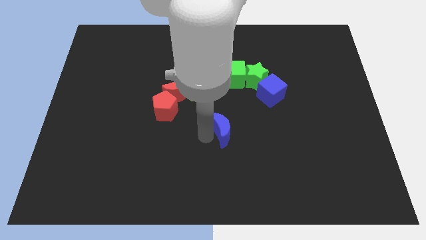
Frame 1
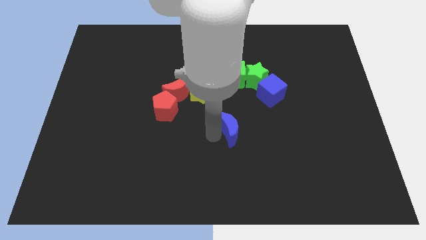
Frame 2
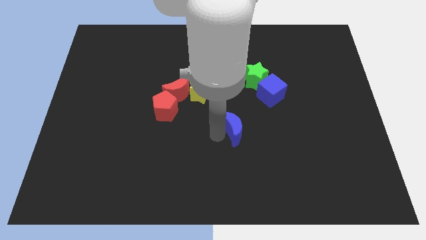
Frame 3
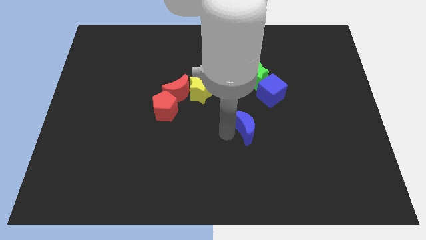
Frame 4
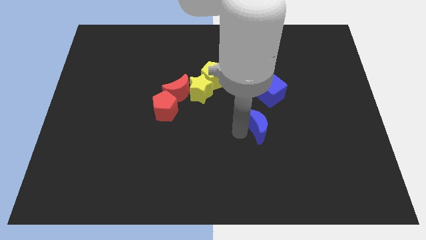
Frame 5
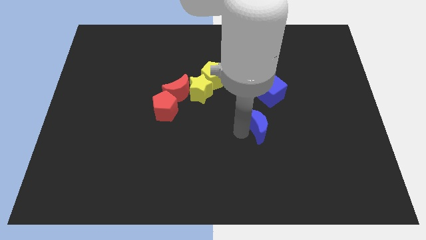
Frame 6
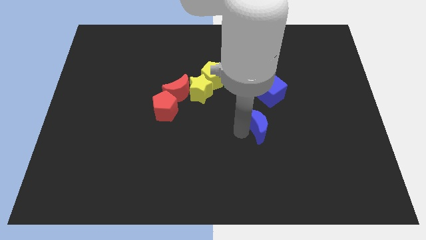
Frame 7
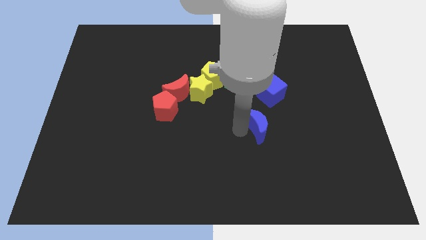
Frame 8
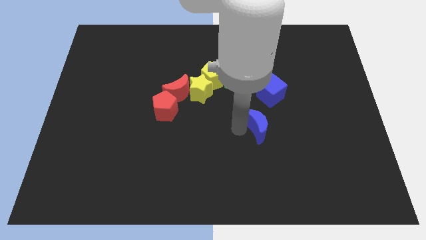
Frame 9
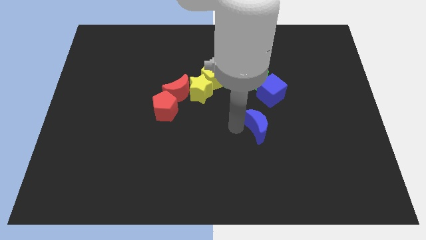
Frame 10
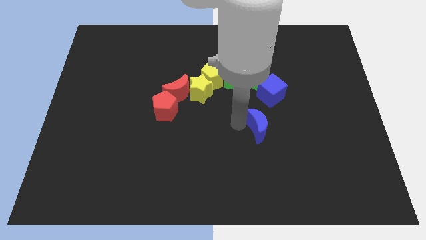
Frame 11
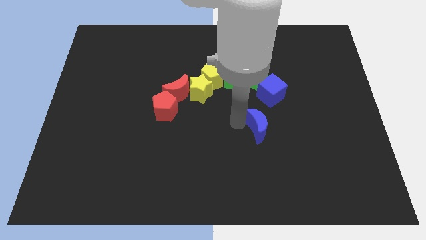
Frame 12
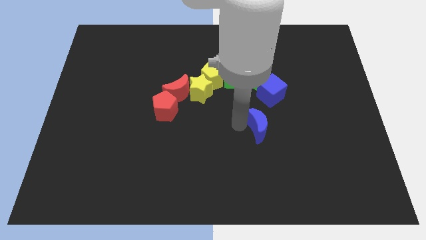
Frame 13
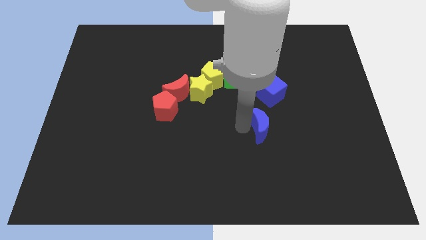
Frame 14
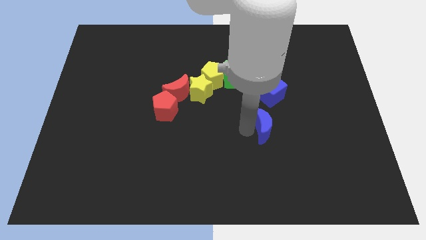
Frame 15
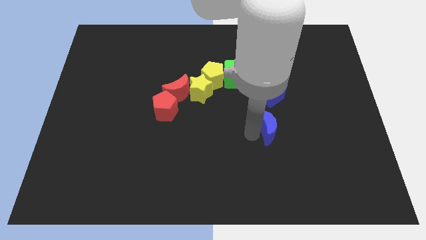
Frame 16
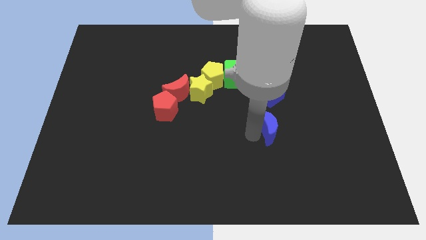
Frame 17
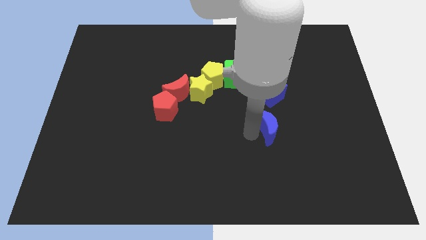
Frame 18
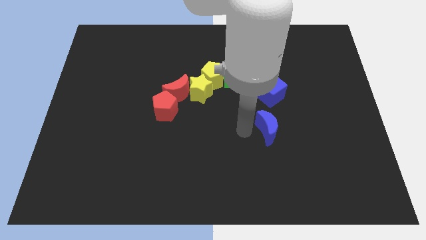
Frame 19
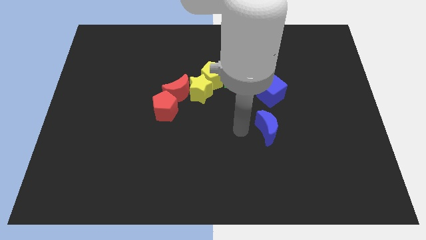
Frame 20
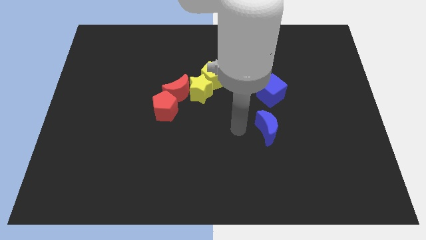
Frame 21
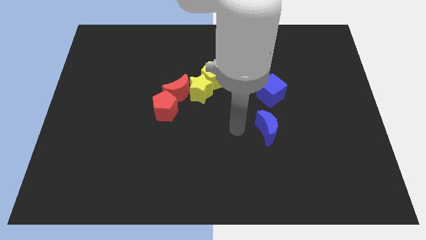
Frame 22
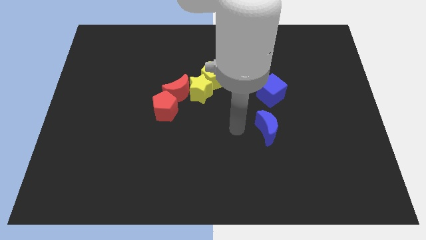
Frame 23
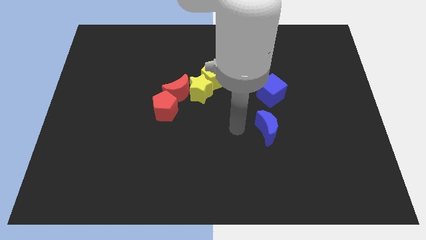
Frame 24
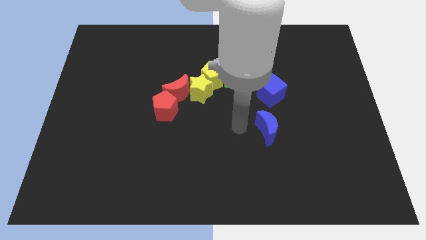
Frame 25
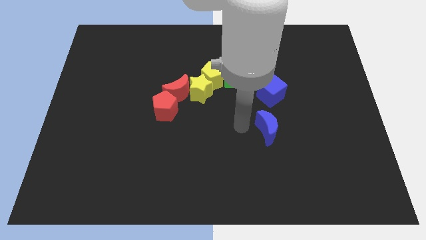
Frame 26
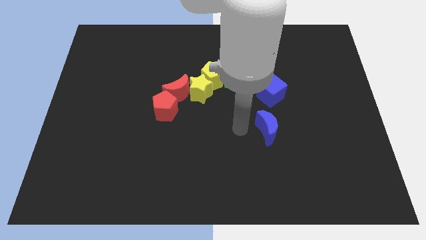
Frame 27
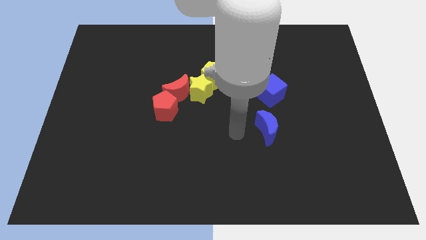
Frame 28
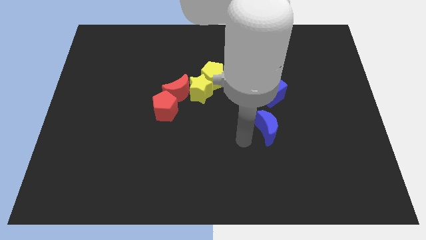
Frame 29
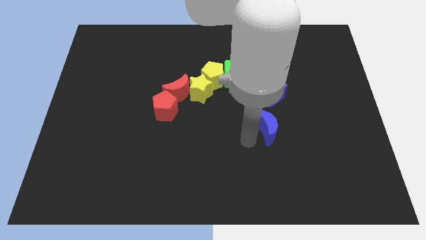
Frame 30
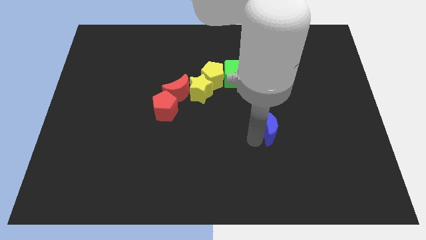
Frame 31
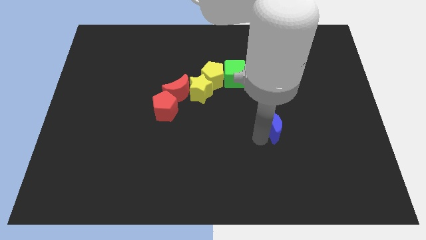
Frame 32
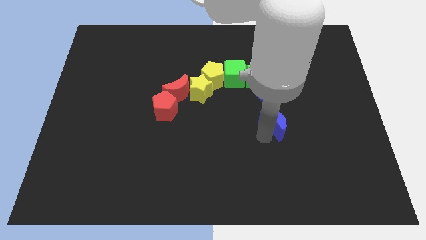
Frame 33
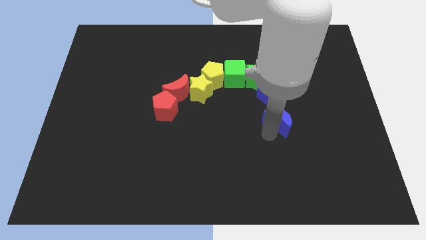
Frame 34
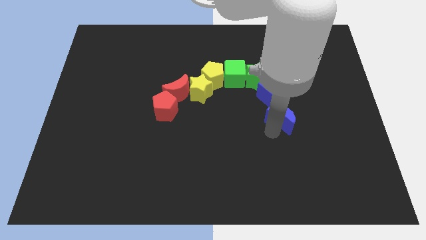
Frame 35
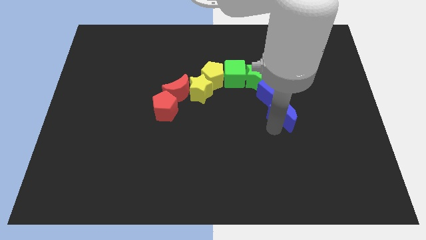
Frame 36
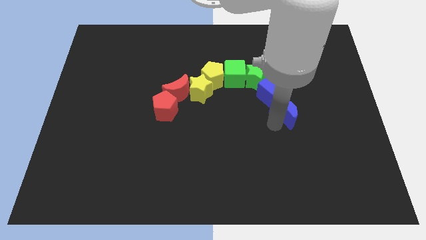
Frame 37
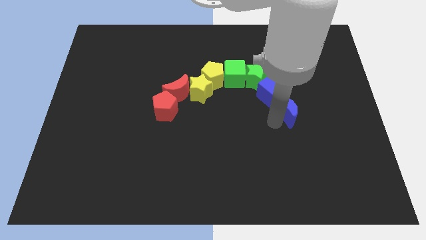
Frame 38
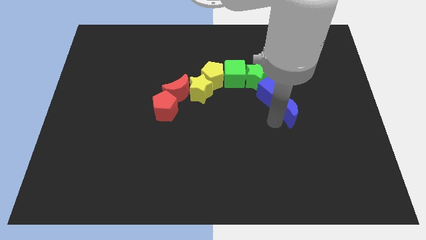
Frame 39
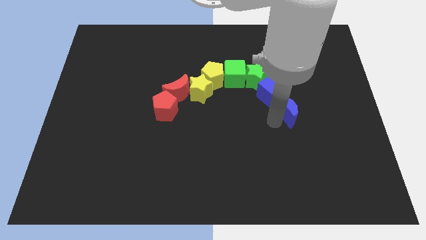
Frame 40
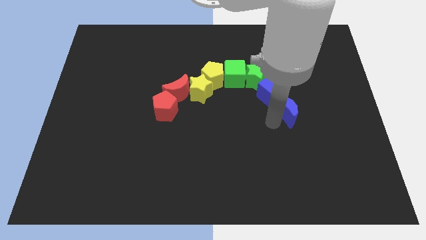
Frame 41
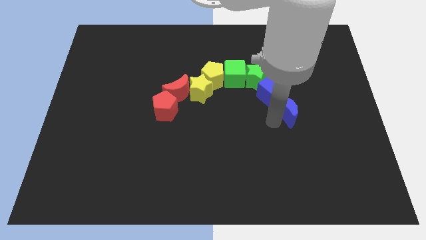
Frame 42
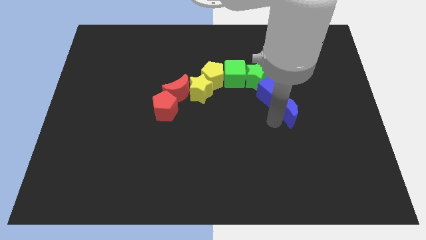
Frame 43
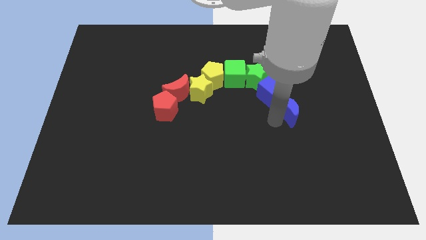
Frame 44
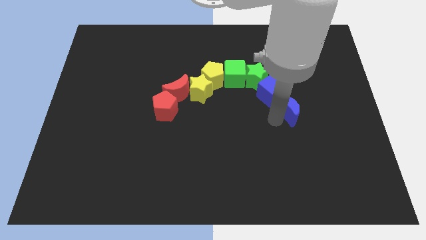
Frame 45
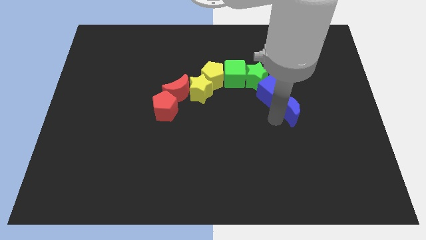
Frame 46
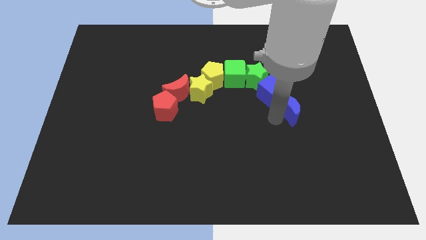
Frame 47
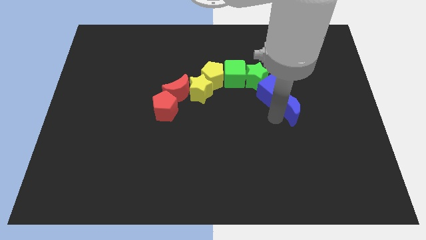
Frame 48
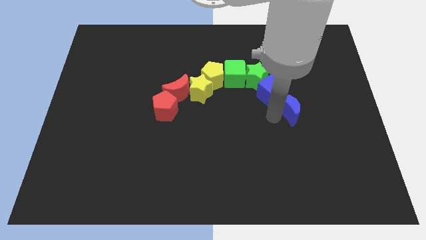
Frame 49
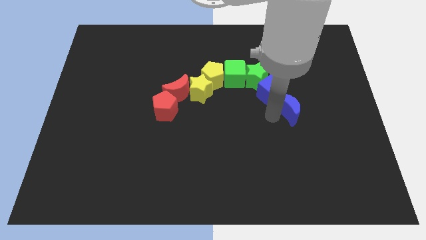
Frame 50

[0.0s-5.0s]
place the blue crescent below the blue cube

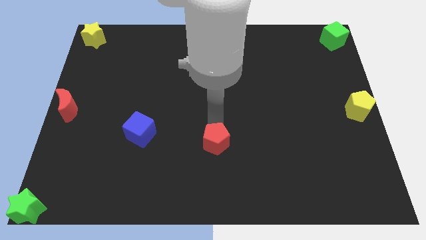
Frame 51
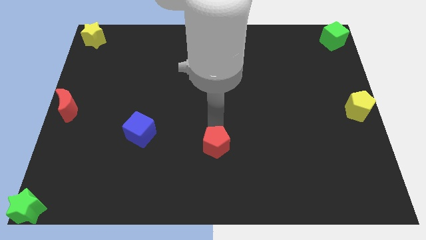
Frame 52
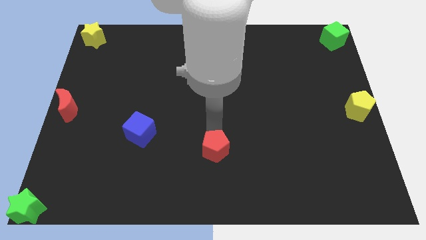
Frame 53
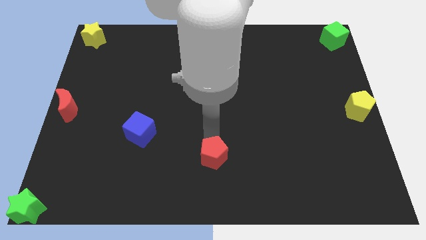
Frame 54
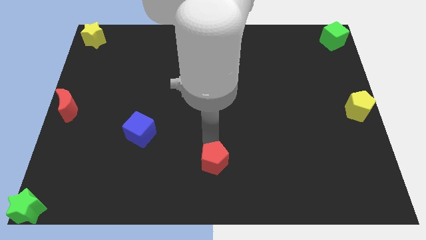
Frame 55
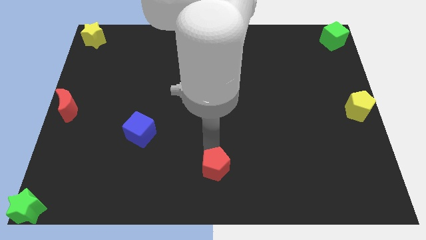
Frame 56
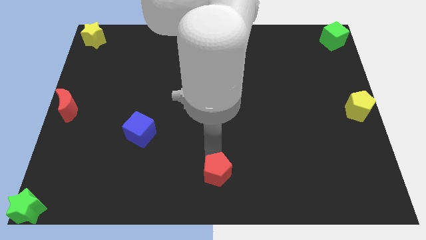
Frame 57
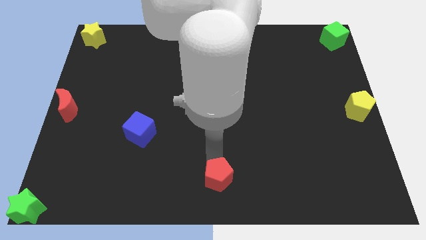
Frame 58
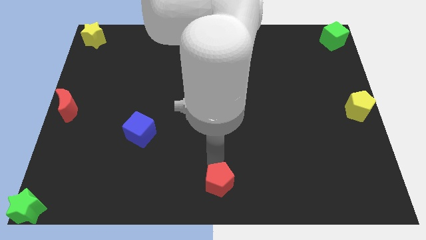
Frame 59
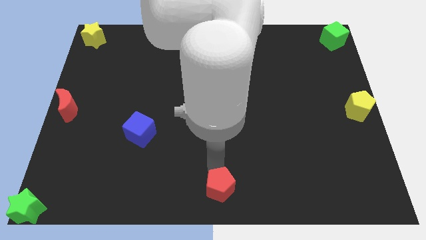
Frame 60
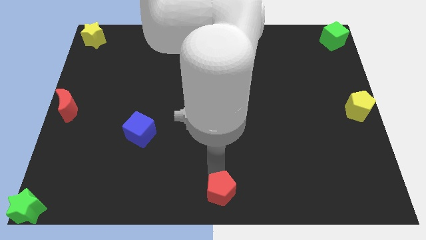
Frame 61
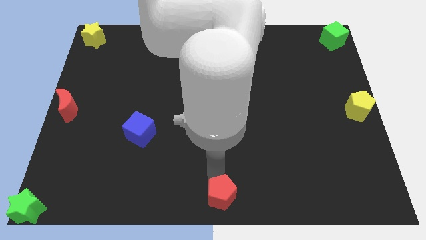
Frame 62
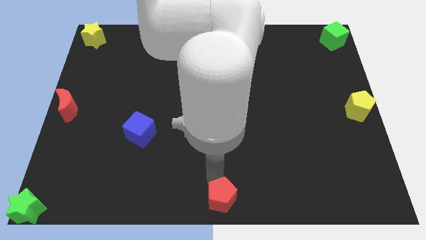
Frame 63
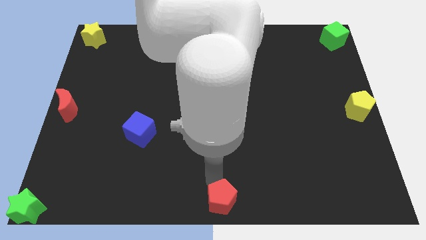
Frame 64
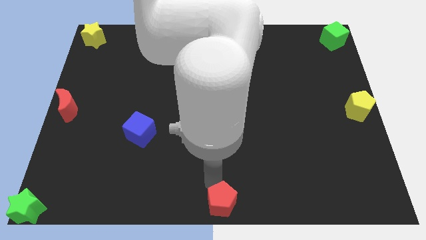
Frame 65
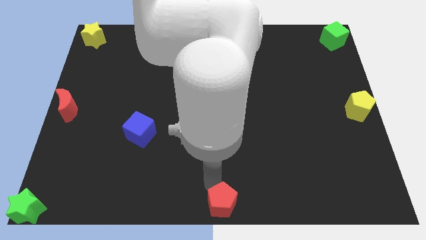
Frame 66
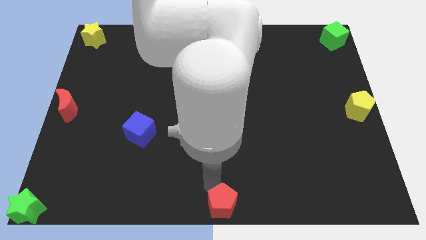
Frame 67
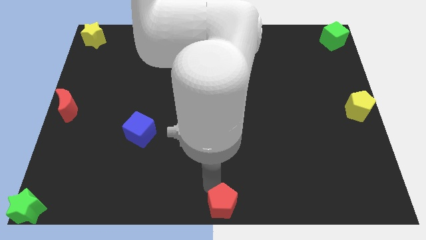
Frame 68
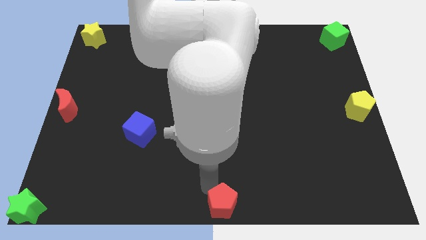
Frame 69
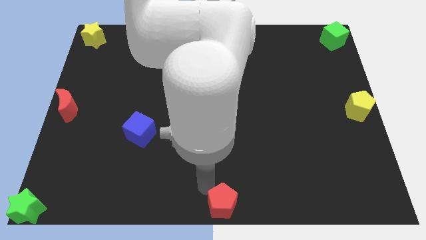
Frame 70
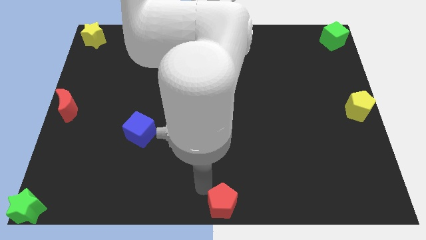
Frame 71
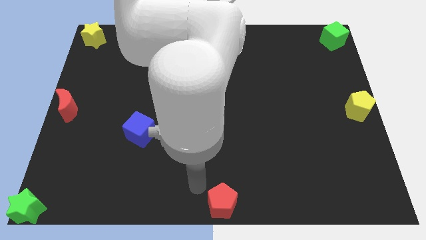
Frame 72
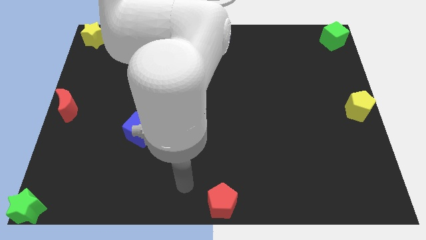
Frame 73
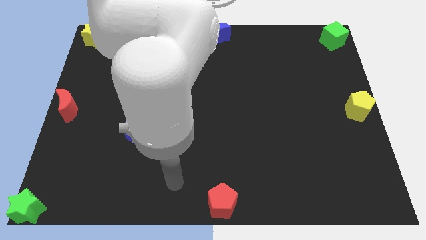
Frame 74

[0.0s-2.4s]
place the red pentagon at the bottom center of the board

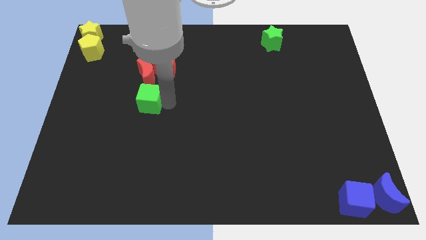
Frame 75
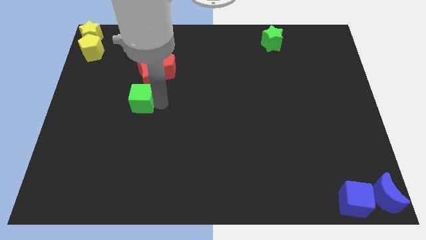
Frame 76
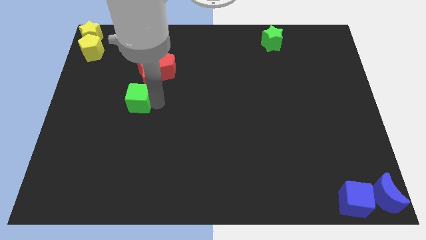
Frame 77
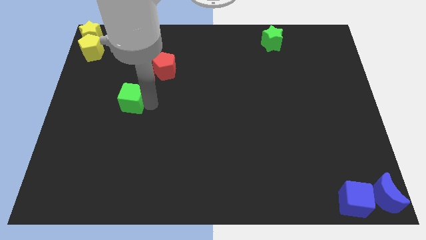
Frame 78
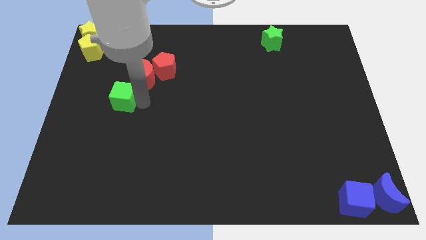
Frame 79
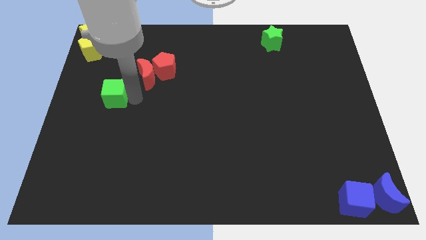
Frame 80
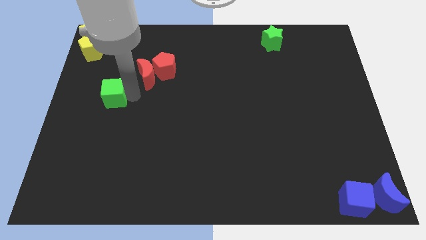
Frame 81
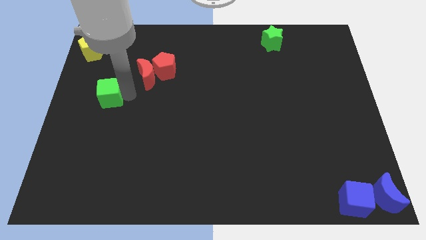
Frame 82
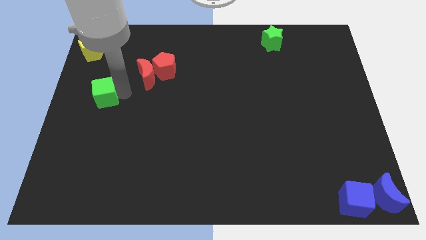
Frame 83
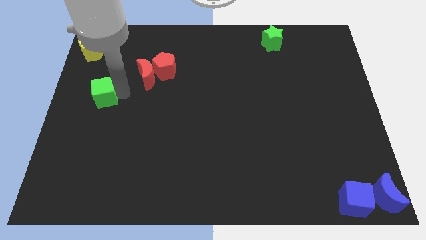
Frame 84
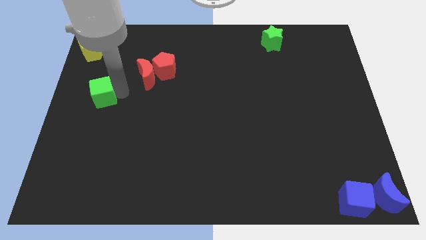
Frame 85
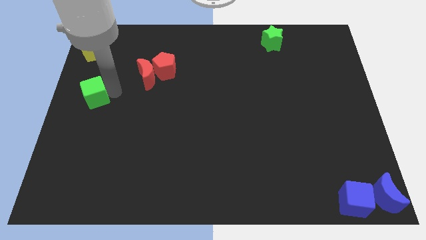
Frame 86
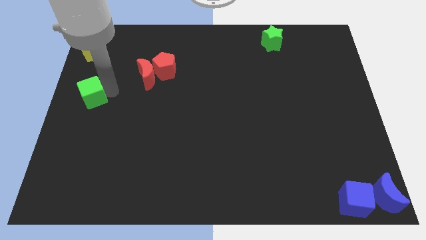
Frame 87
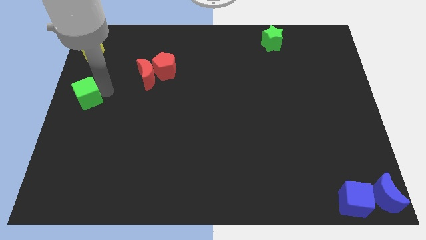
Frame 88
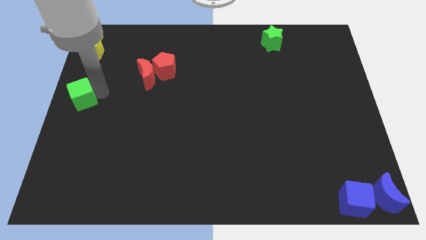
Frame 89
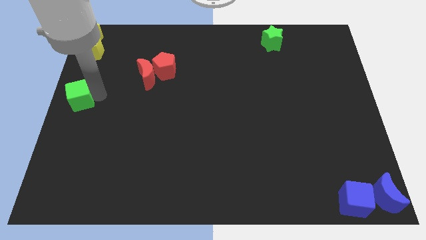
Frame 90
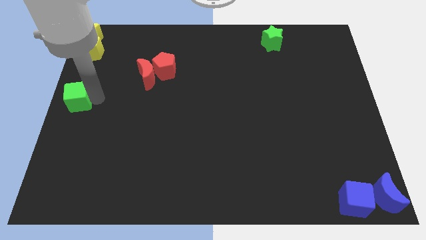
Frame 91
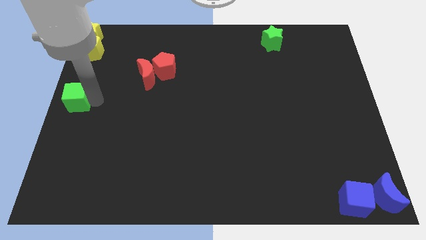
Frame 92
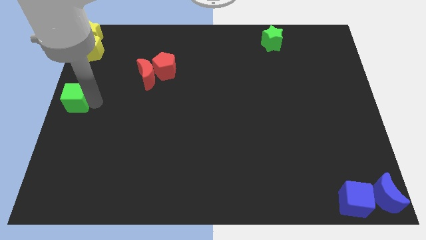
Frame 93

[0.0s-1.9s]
move the green cube to left center of the board
